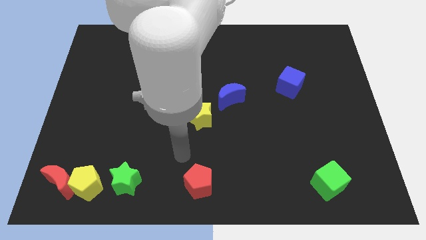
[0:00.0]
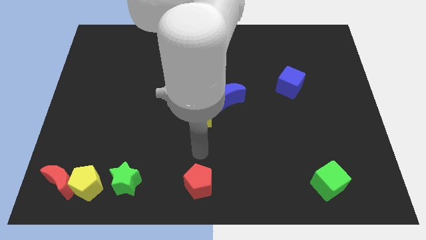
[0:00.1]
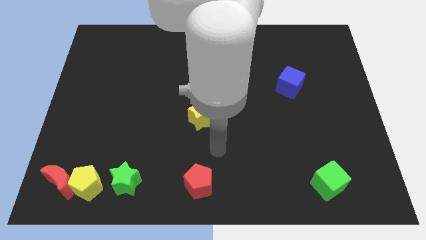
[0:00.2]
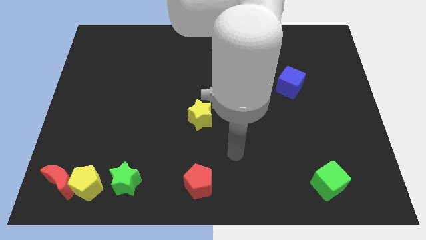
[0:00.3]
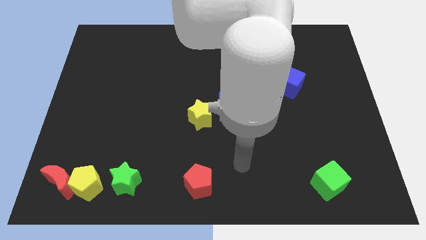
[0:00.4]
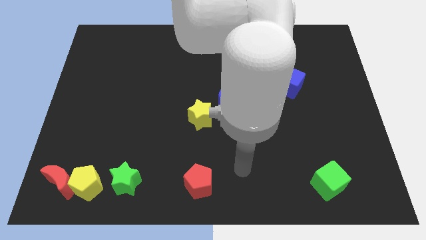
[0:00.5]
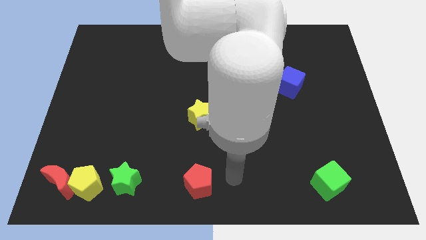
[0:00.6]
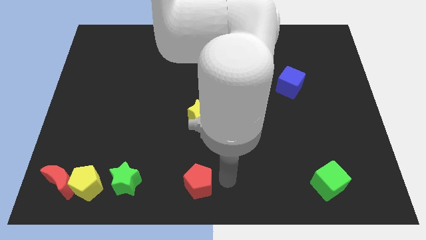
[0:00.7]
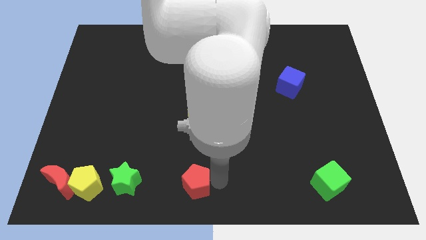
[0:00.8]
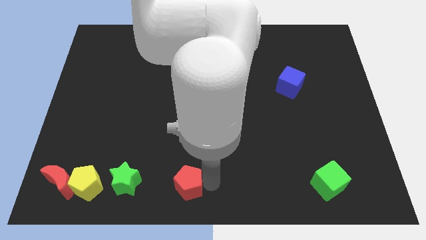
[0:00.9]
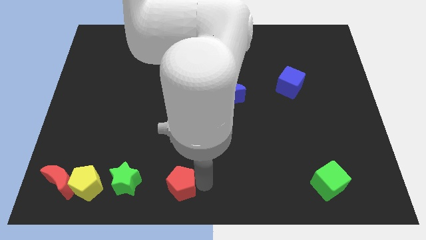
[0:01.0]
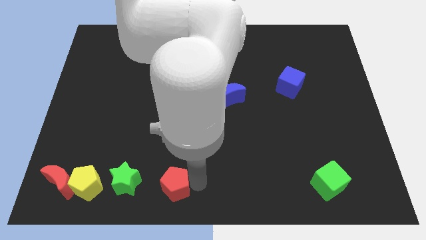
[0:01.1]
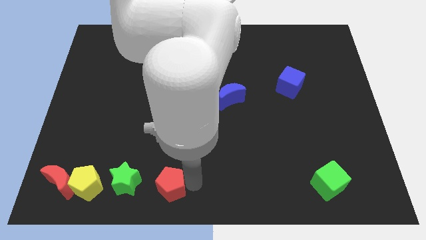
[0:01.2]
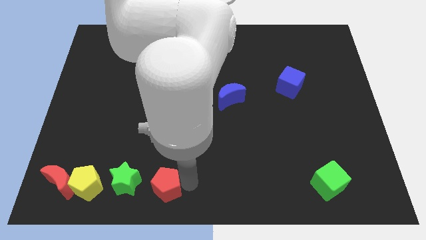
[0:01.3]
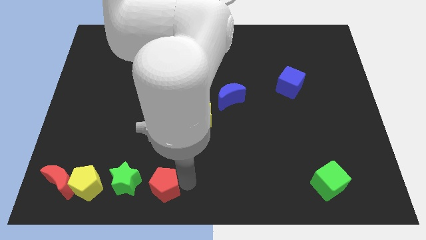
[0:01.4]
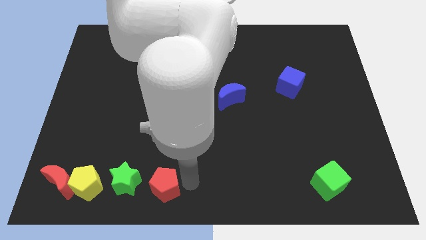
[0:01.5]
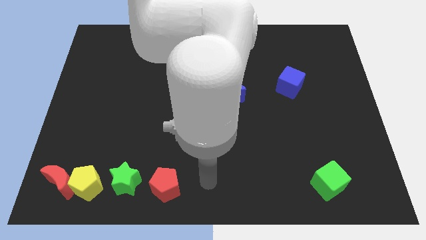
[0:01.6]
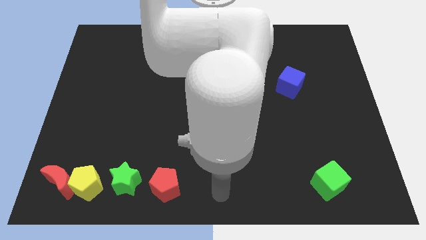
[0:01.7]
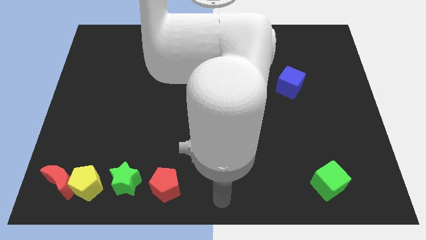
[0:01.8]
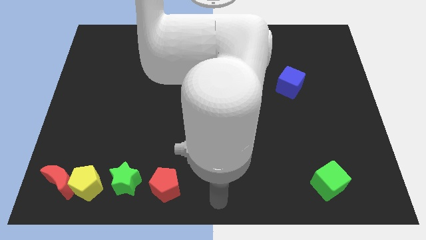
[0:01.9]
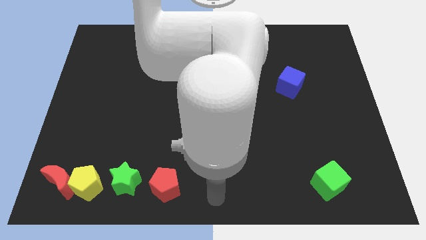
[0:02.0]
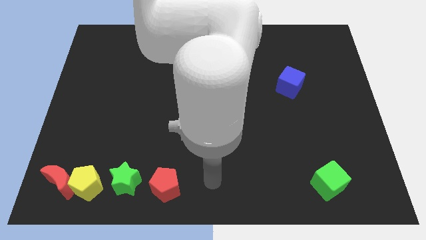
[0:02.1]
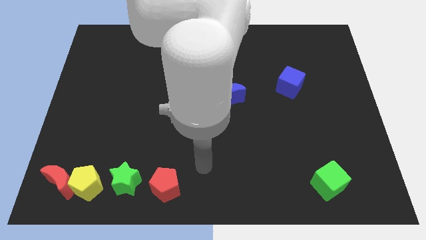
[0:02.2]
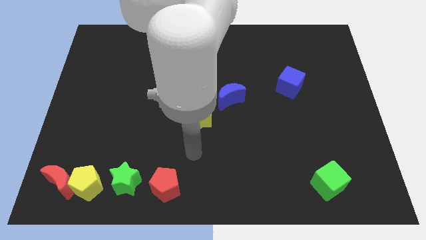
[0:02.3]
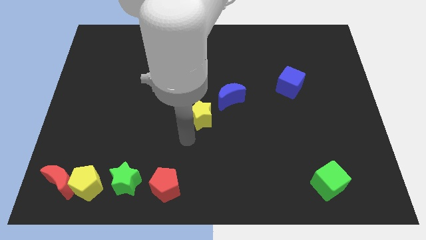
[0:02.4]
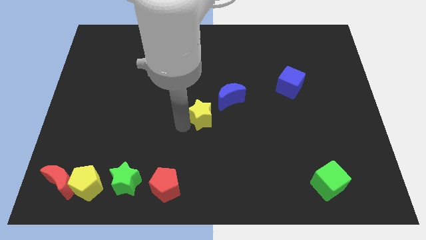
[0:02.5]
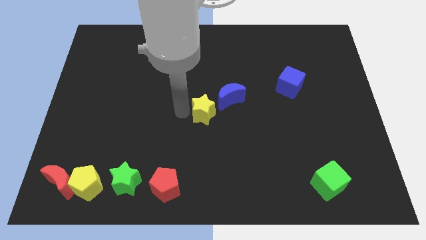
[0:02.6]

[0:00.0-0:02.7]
move red pentagon right to the green star

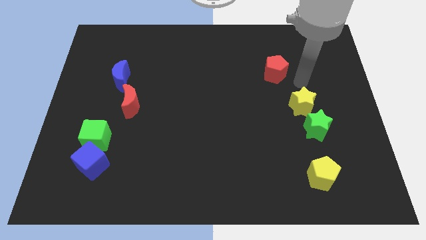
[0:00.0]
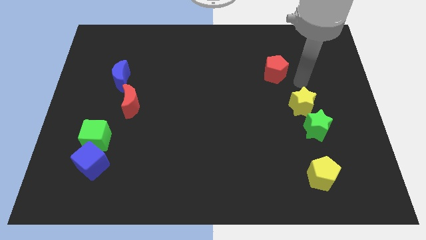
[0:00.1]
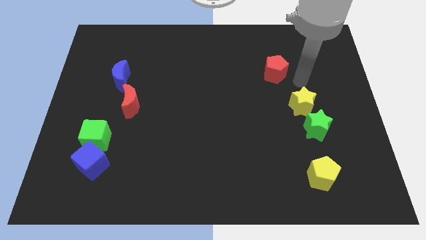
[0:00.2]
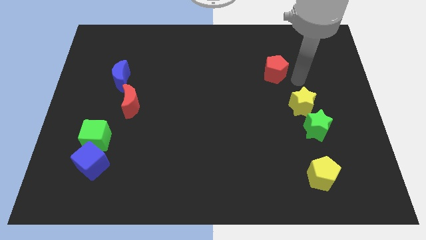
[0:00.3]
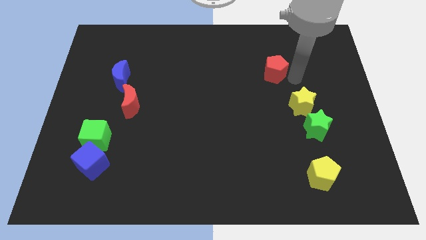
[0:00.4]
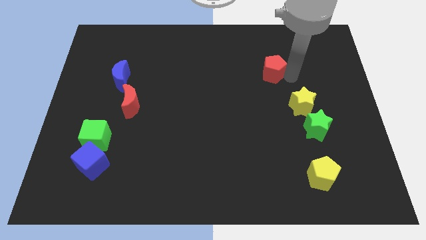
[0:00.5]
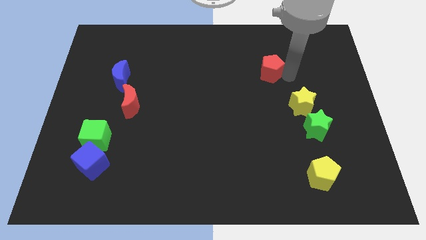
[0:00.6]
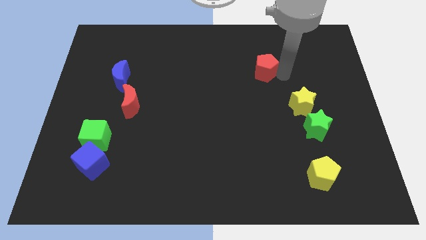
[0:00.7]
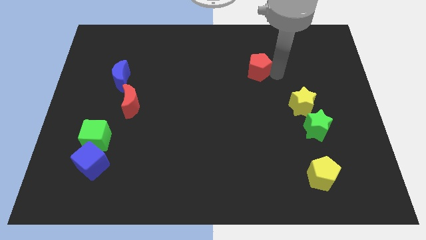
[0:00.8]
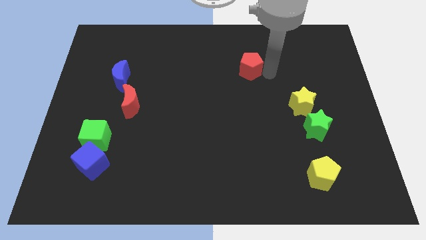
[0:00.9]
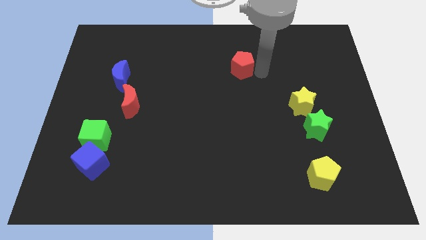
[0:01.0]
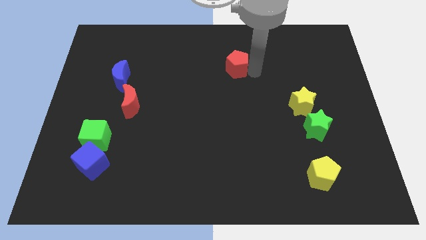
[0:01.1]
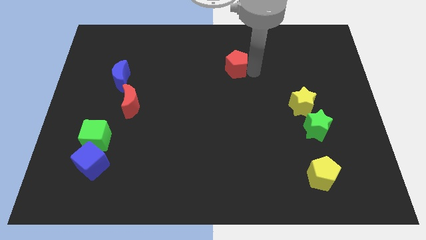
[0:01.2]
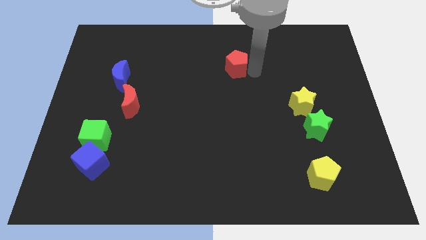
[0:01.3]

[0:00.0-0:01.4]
move red pentagon towards the left side of the board

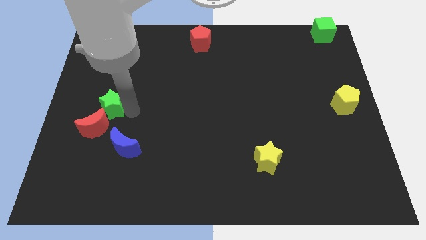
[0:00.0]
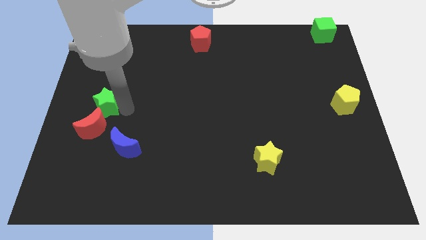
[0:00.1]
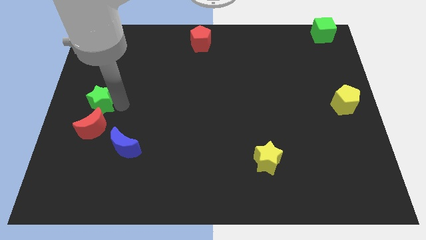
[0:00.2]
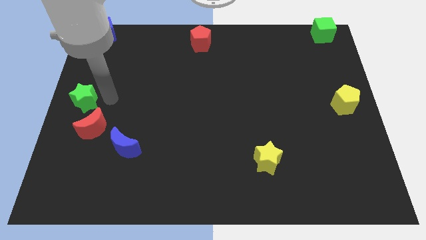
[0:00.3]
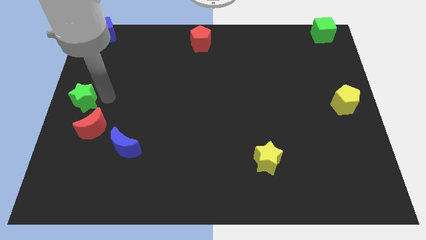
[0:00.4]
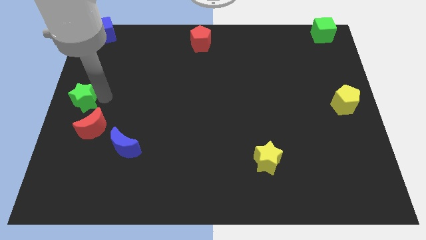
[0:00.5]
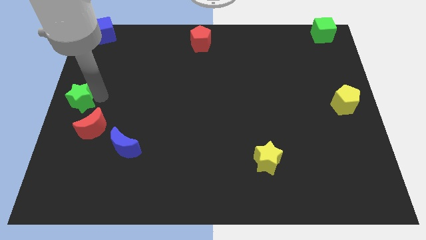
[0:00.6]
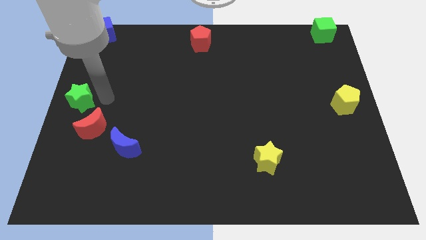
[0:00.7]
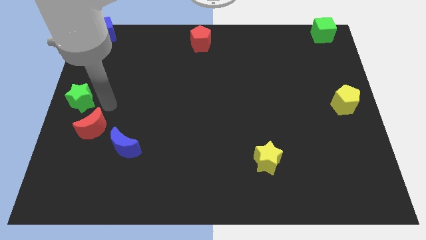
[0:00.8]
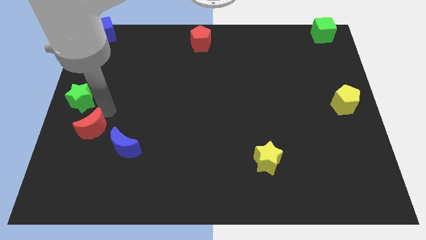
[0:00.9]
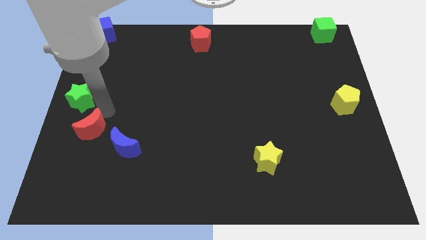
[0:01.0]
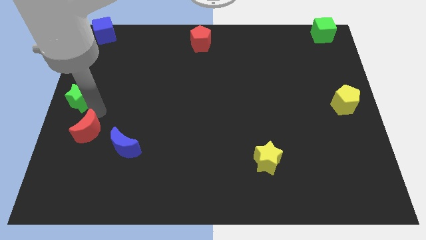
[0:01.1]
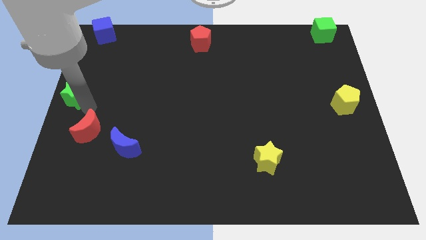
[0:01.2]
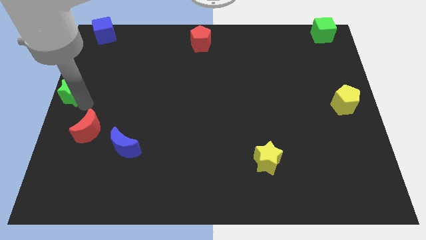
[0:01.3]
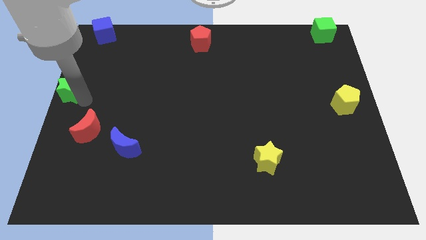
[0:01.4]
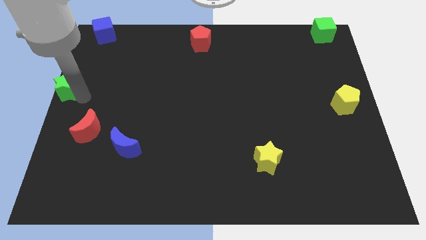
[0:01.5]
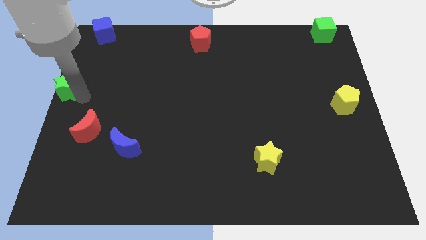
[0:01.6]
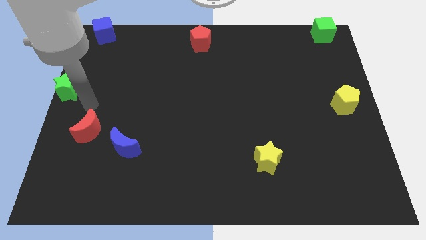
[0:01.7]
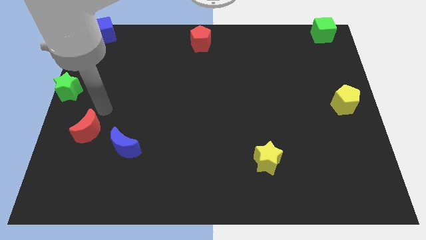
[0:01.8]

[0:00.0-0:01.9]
push the green star to the centre left of the board

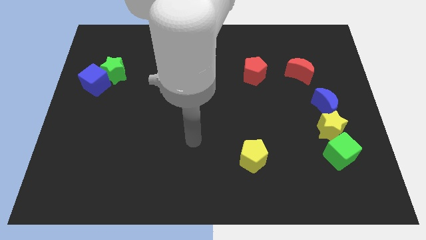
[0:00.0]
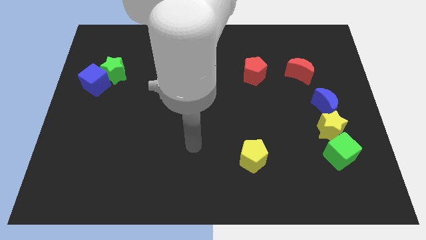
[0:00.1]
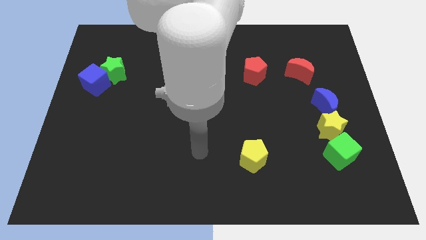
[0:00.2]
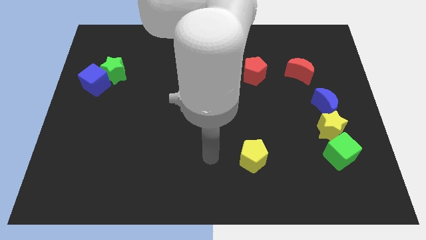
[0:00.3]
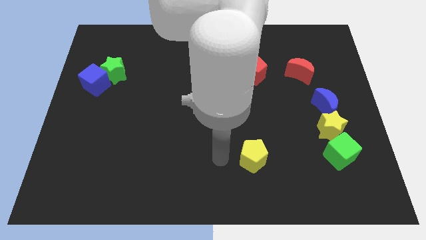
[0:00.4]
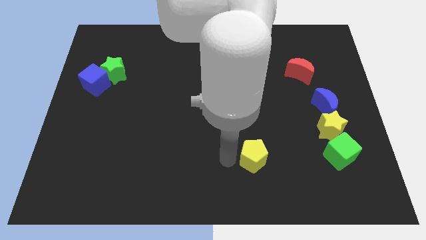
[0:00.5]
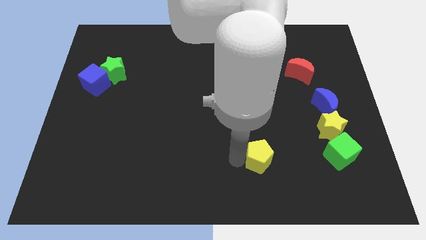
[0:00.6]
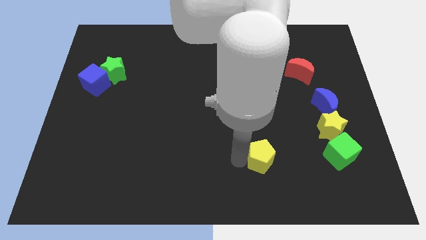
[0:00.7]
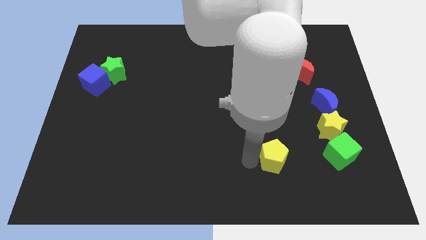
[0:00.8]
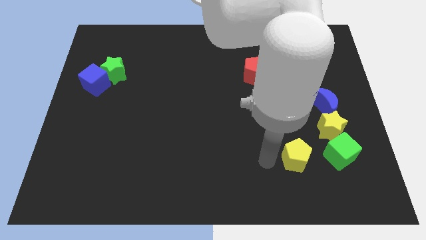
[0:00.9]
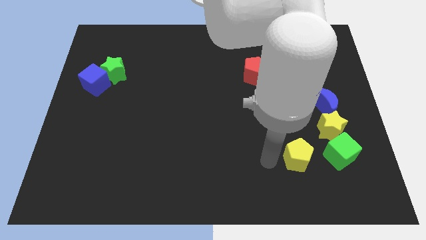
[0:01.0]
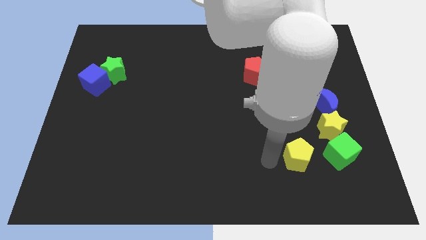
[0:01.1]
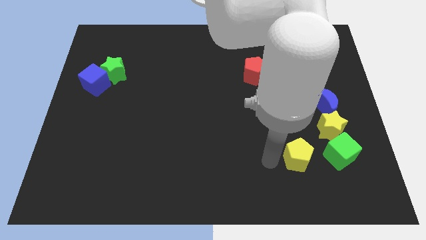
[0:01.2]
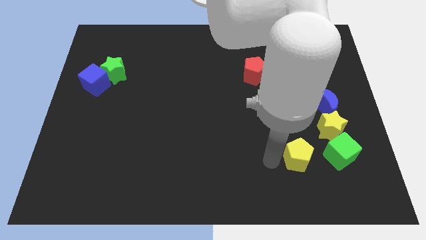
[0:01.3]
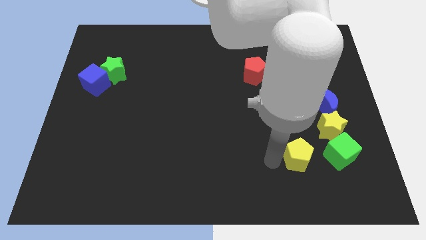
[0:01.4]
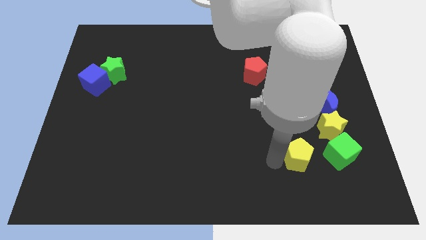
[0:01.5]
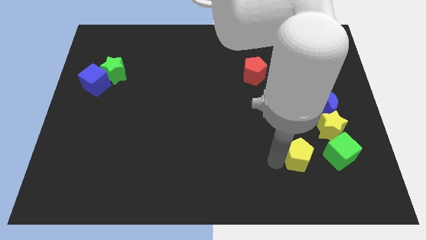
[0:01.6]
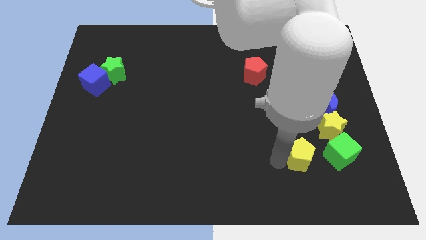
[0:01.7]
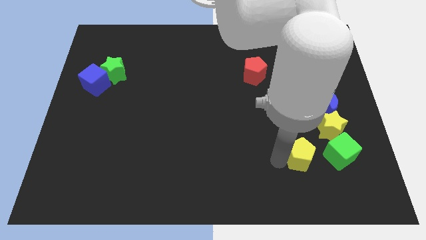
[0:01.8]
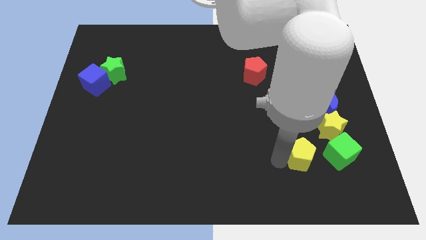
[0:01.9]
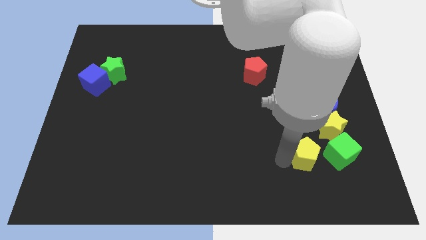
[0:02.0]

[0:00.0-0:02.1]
push yellow pentagon into green cube

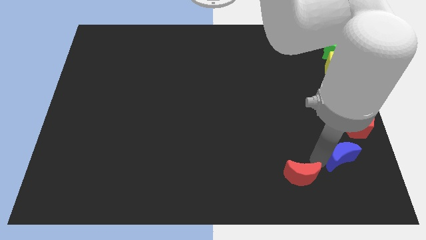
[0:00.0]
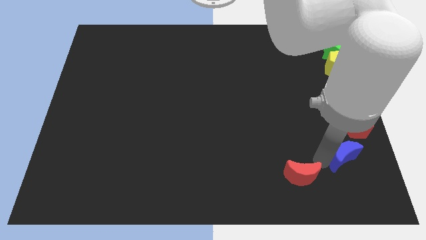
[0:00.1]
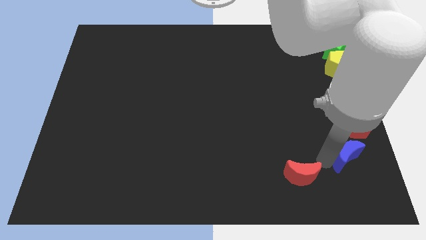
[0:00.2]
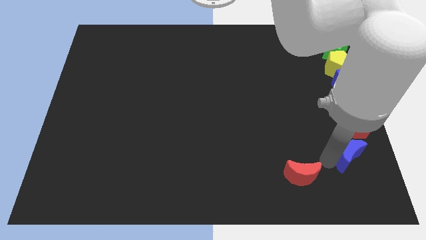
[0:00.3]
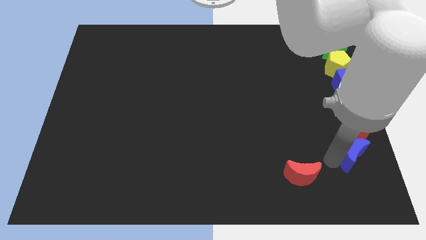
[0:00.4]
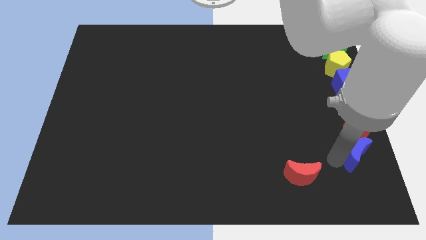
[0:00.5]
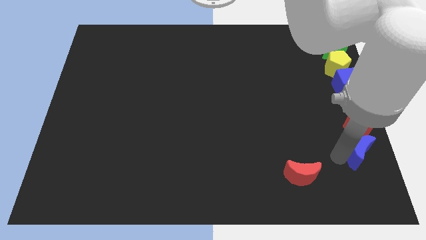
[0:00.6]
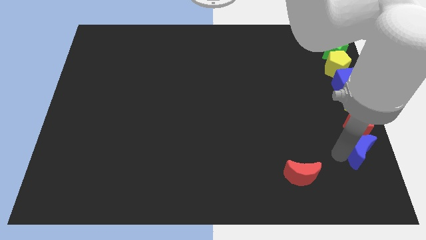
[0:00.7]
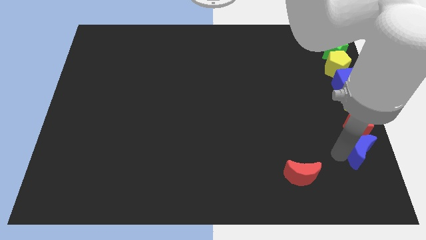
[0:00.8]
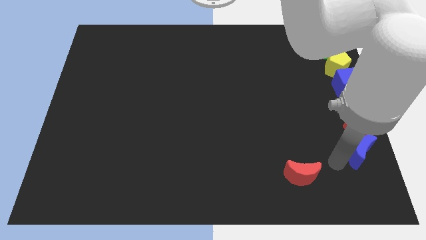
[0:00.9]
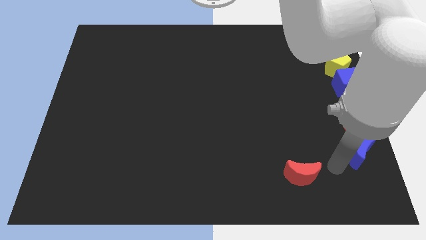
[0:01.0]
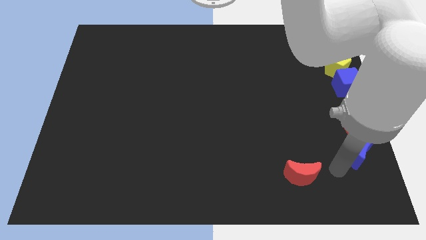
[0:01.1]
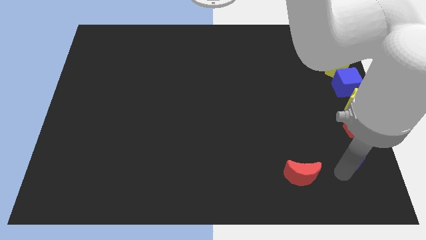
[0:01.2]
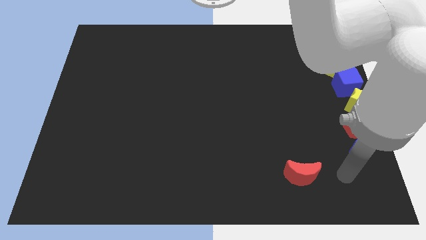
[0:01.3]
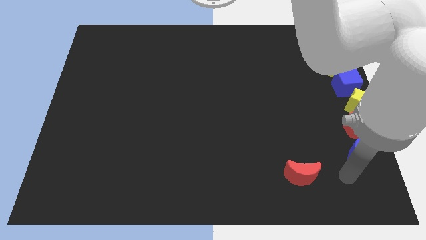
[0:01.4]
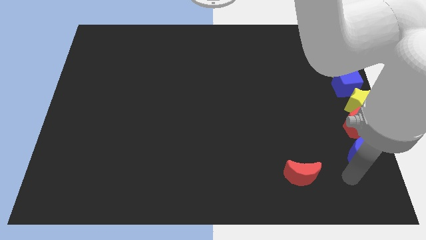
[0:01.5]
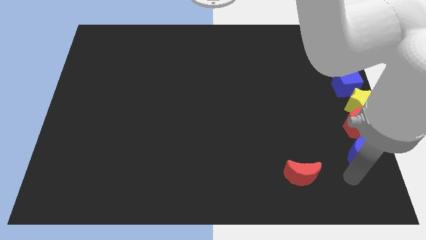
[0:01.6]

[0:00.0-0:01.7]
place the blue crescent below the red pentagon
